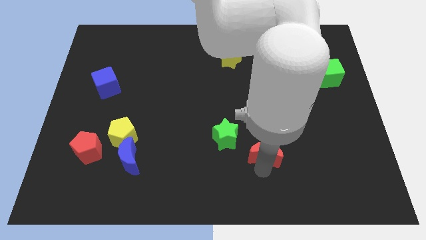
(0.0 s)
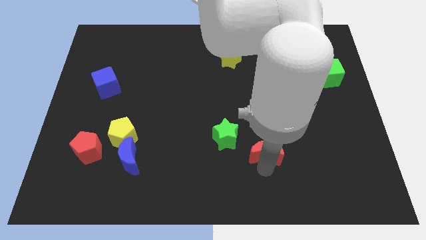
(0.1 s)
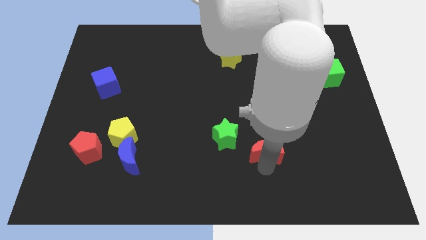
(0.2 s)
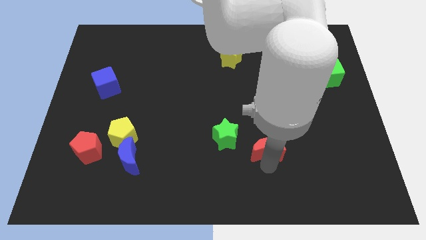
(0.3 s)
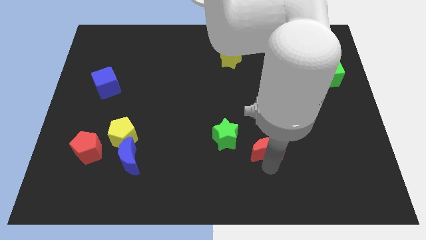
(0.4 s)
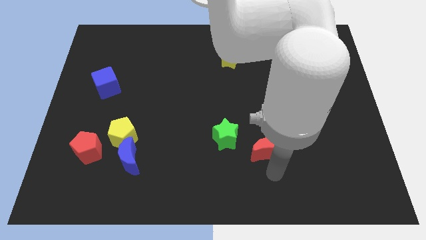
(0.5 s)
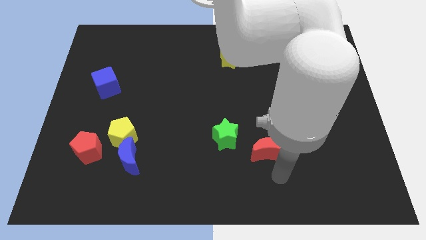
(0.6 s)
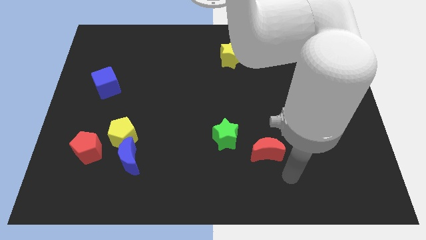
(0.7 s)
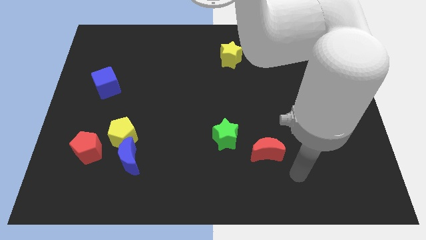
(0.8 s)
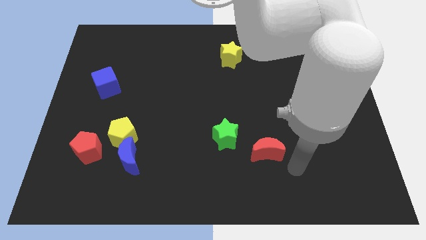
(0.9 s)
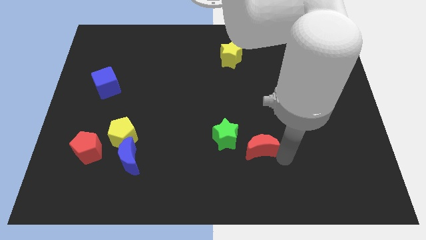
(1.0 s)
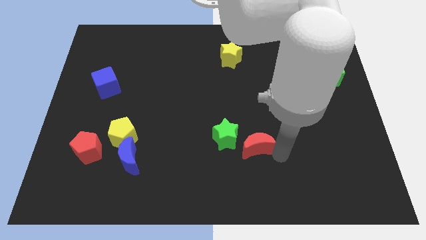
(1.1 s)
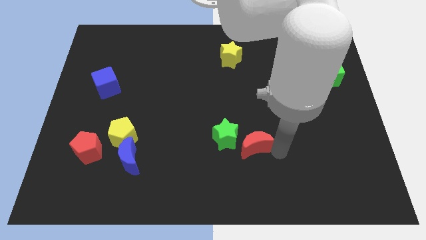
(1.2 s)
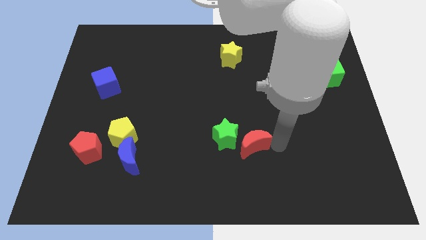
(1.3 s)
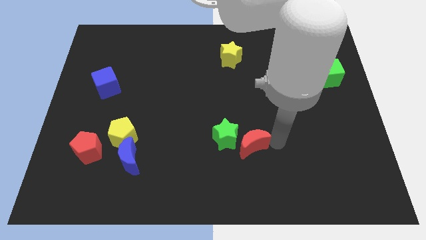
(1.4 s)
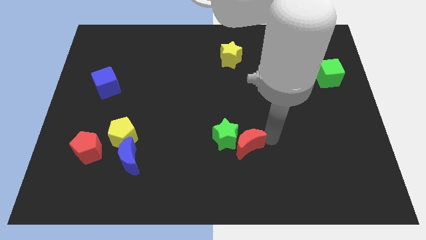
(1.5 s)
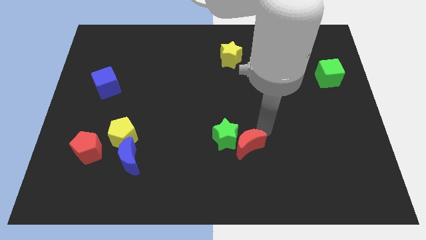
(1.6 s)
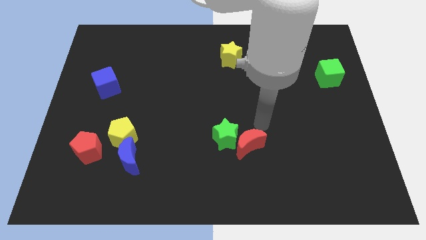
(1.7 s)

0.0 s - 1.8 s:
place the red moon to the bottom right of the green star

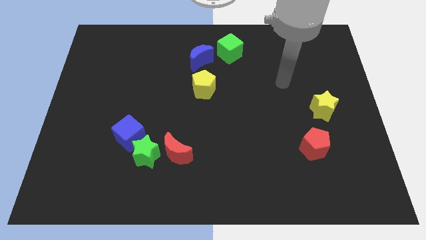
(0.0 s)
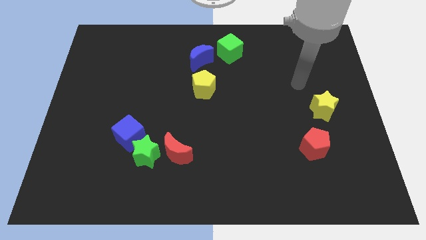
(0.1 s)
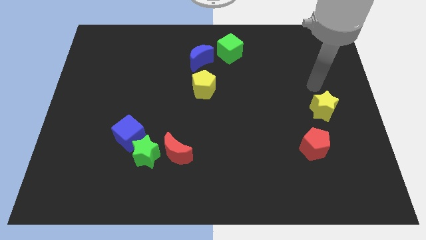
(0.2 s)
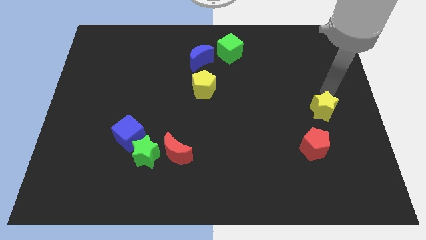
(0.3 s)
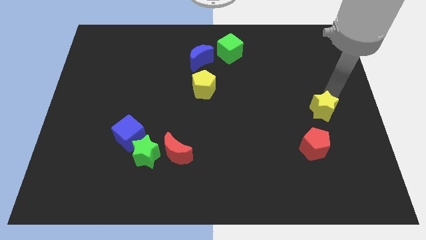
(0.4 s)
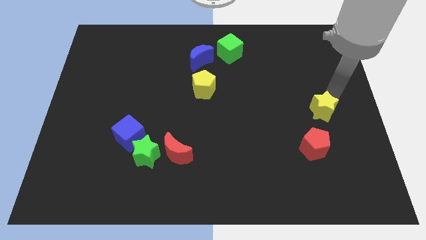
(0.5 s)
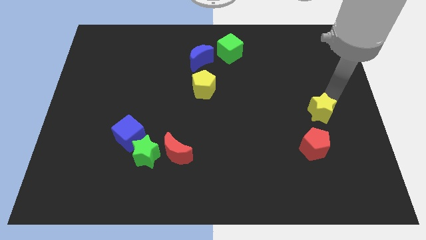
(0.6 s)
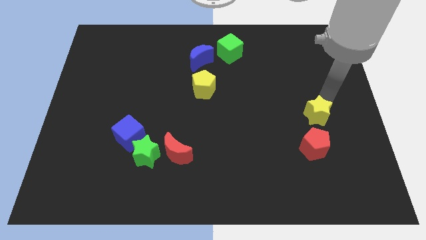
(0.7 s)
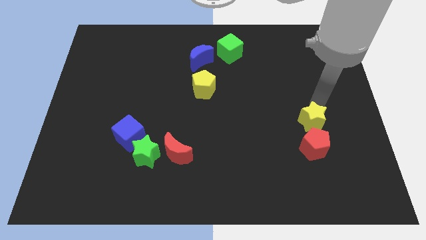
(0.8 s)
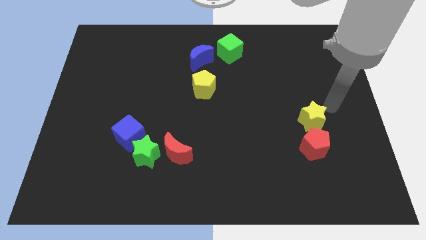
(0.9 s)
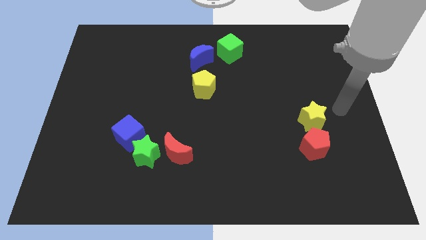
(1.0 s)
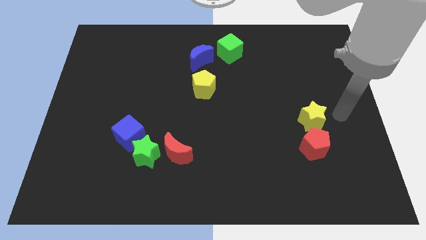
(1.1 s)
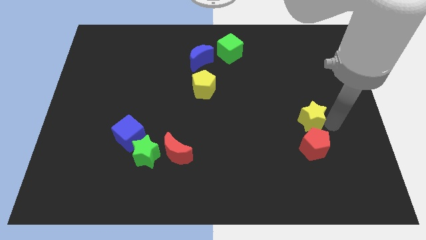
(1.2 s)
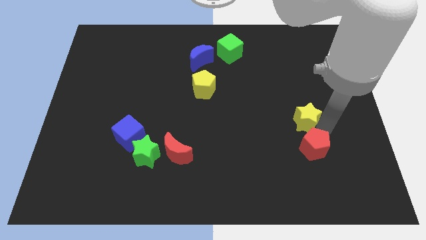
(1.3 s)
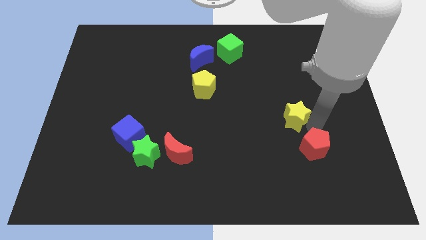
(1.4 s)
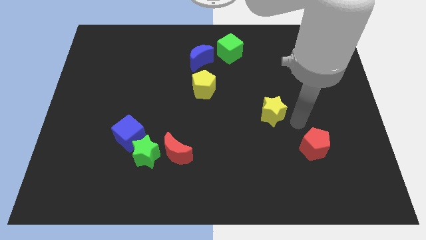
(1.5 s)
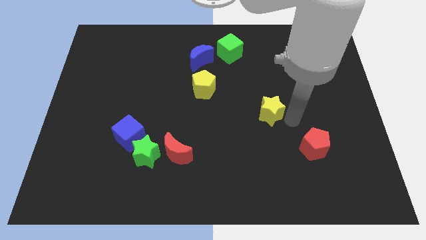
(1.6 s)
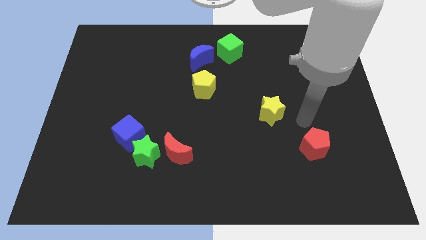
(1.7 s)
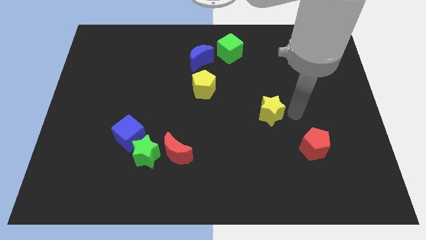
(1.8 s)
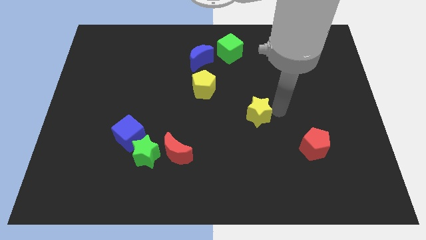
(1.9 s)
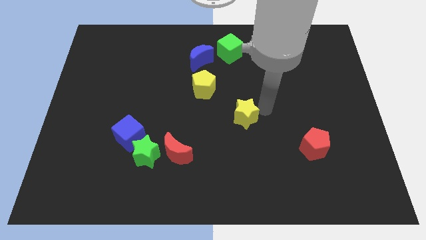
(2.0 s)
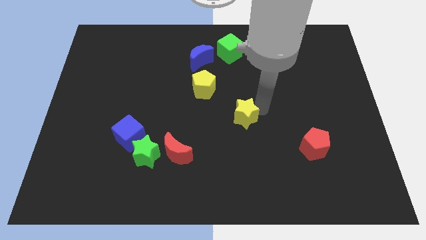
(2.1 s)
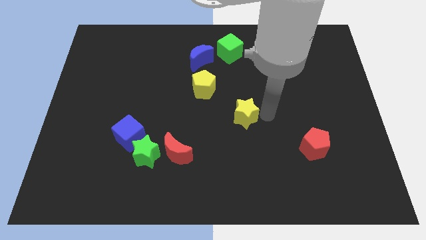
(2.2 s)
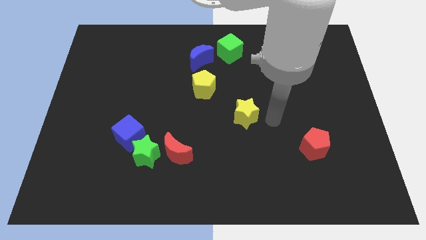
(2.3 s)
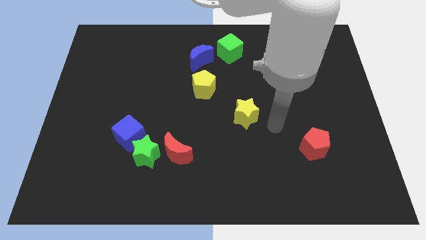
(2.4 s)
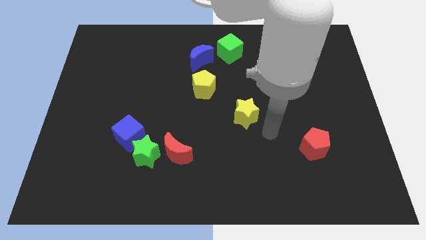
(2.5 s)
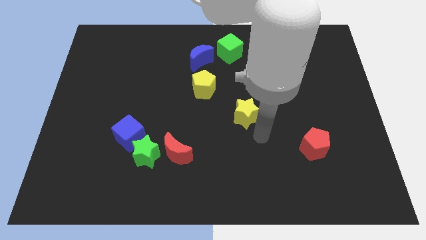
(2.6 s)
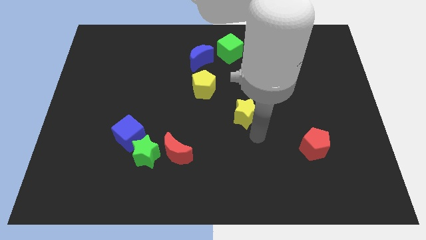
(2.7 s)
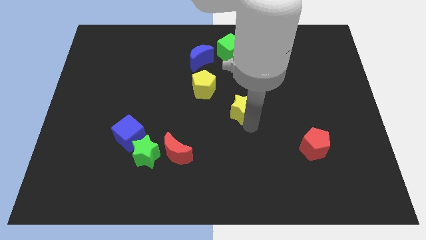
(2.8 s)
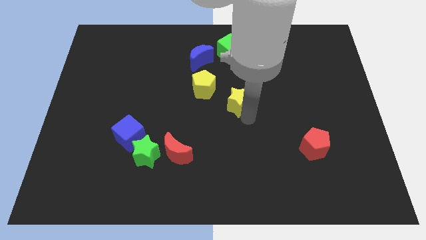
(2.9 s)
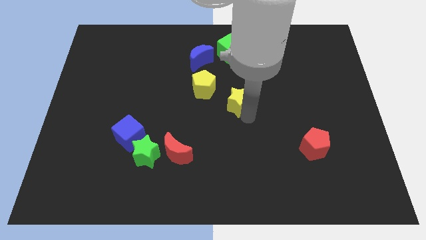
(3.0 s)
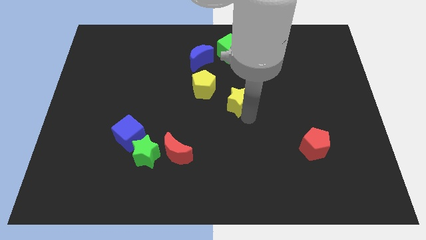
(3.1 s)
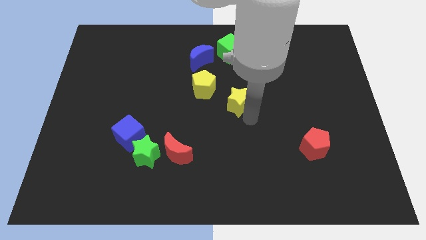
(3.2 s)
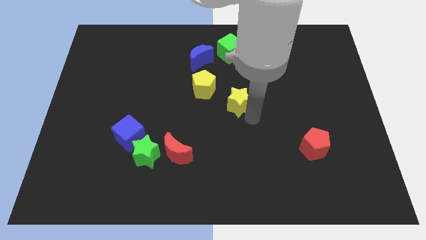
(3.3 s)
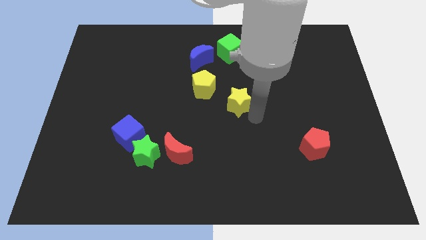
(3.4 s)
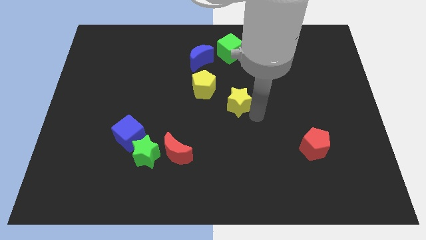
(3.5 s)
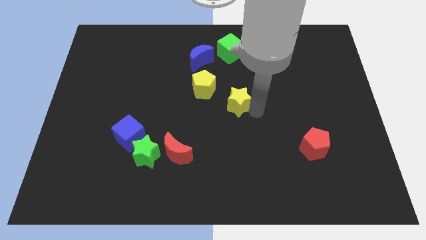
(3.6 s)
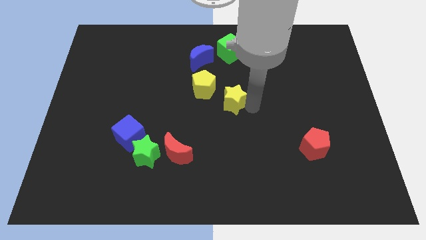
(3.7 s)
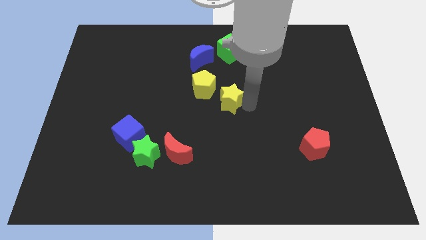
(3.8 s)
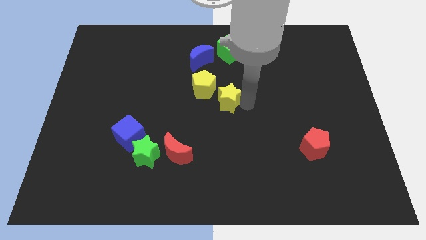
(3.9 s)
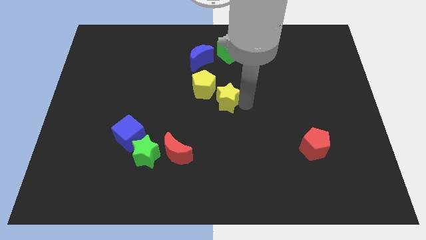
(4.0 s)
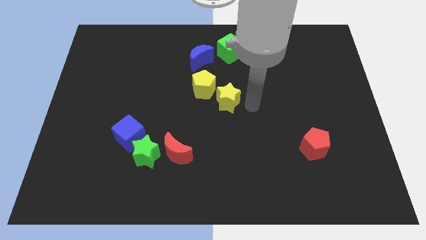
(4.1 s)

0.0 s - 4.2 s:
place the yellow star diagonally right to the yellow pentagon

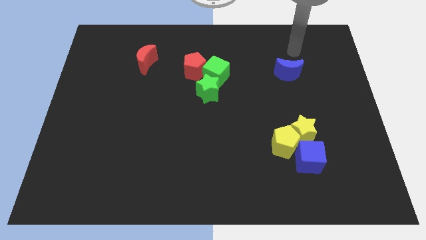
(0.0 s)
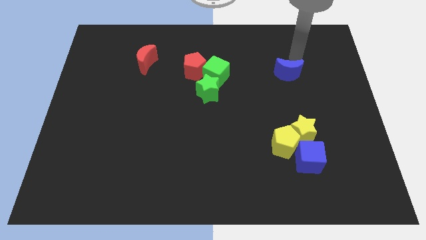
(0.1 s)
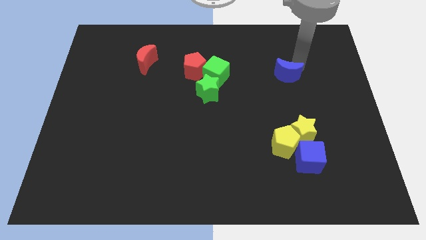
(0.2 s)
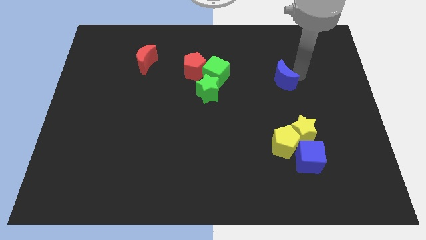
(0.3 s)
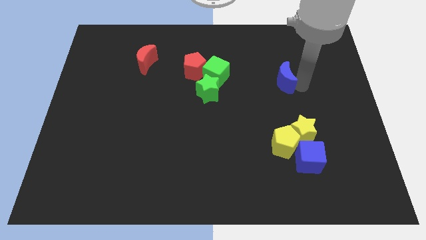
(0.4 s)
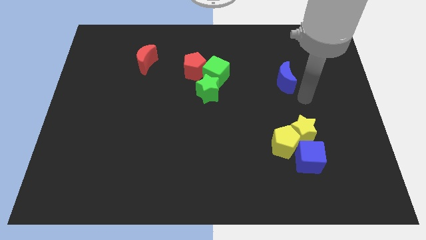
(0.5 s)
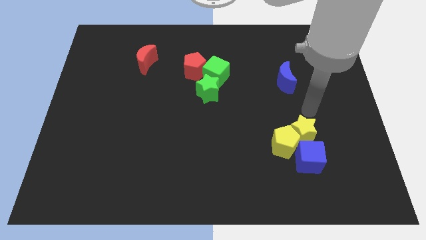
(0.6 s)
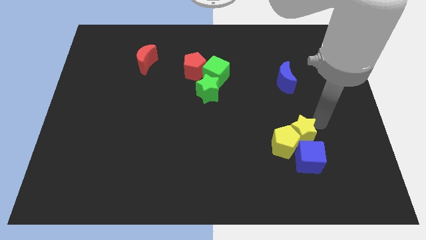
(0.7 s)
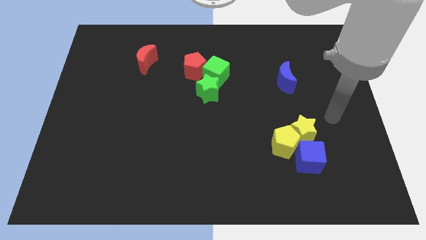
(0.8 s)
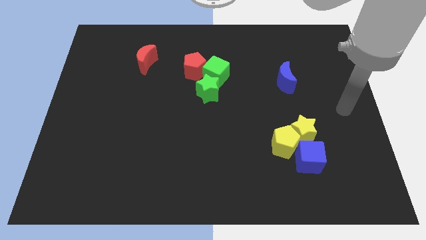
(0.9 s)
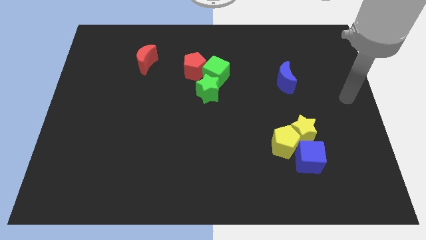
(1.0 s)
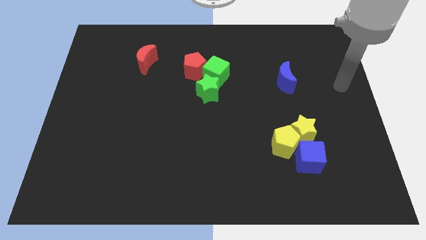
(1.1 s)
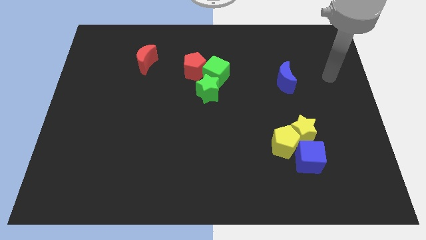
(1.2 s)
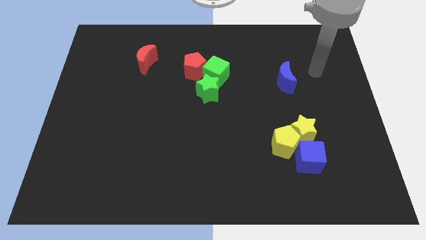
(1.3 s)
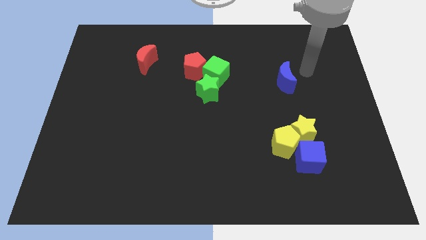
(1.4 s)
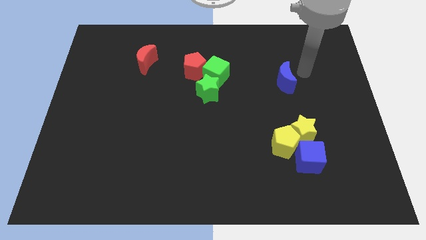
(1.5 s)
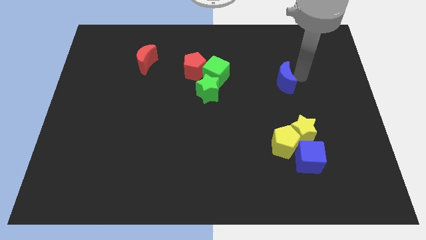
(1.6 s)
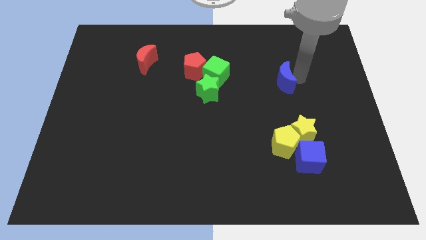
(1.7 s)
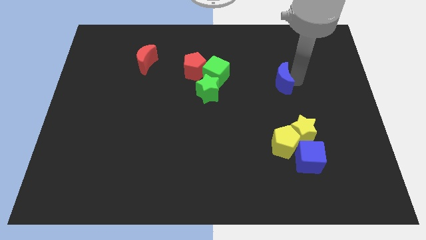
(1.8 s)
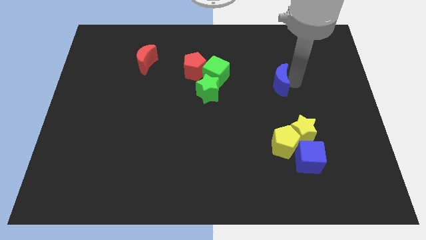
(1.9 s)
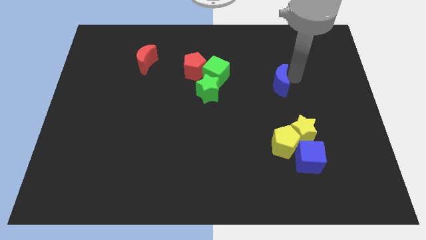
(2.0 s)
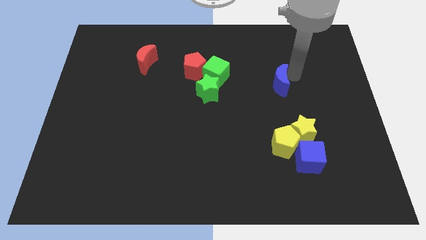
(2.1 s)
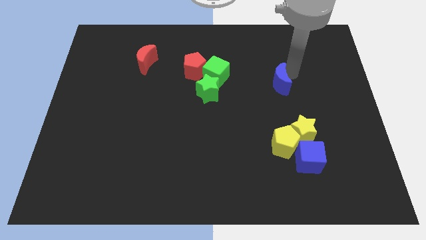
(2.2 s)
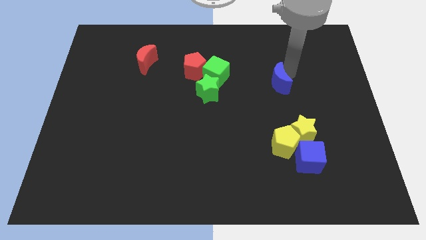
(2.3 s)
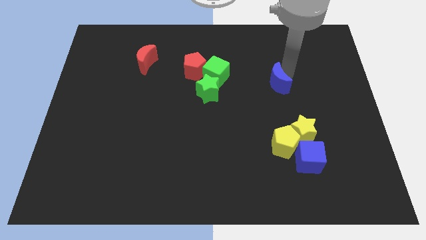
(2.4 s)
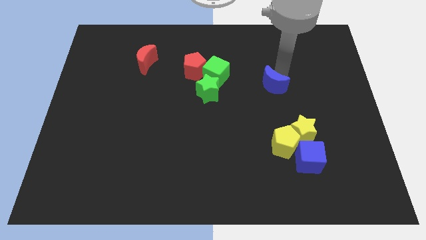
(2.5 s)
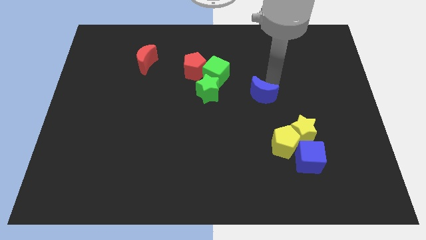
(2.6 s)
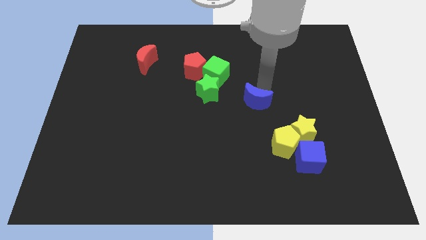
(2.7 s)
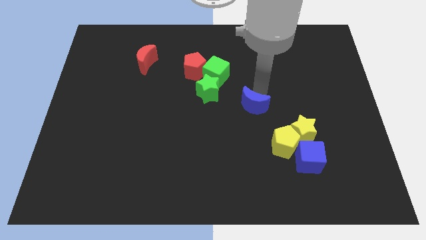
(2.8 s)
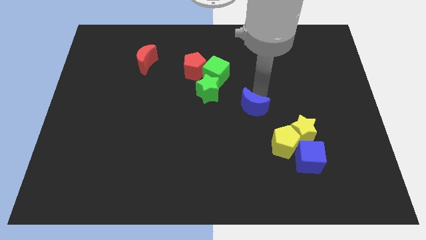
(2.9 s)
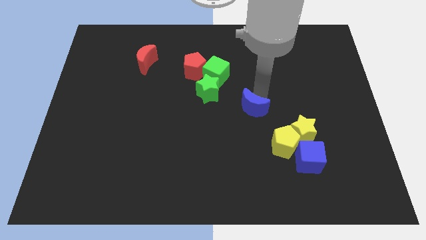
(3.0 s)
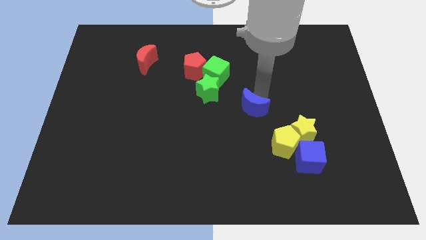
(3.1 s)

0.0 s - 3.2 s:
push blue crescent diagonally top left to the yellow pentagon
